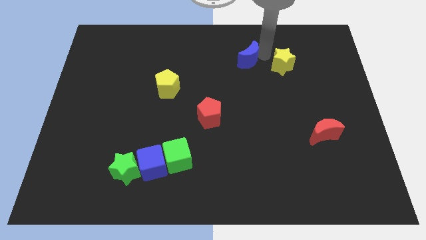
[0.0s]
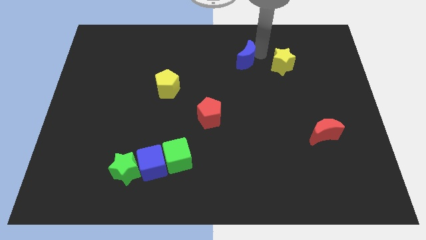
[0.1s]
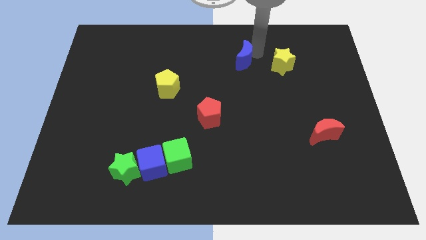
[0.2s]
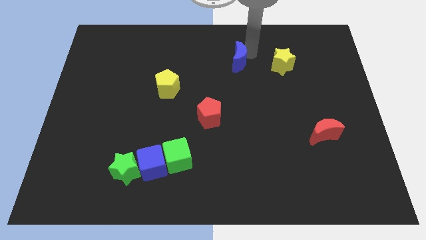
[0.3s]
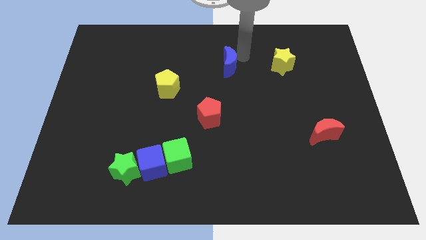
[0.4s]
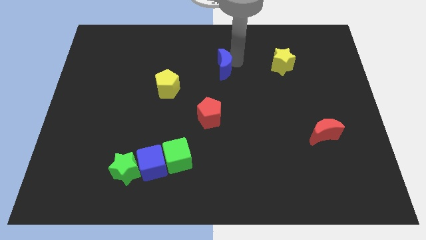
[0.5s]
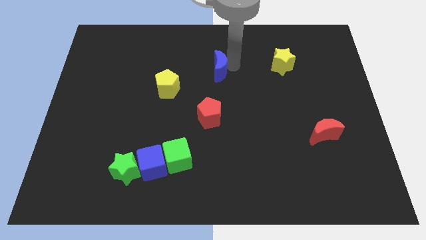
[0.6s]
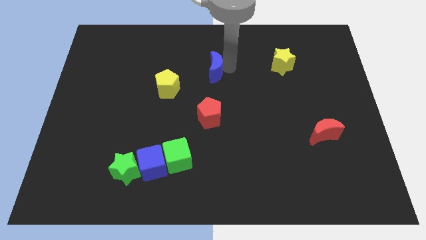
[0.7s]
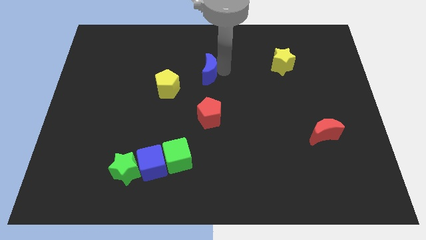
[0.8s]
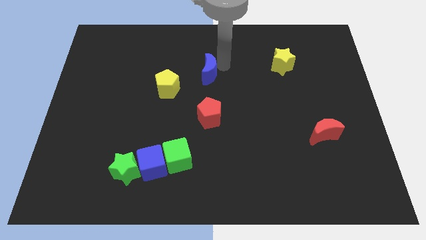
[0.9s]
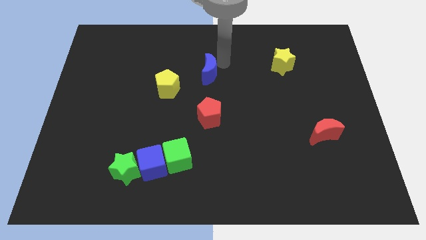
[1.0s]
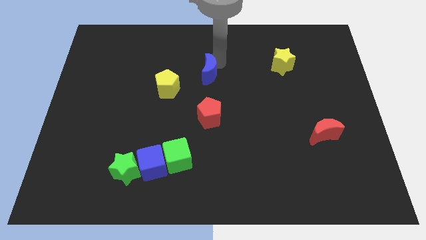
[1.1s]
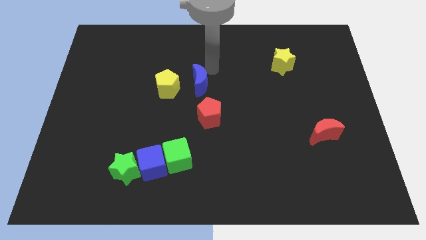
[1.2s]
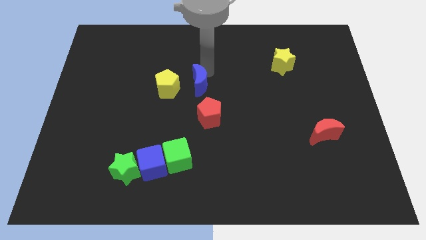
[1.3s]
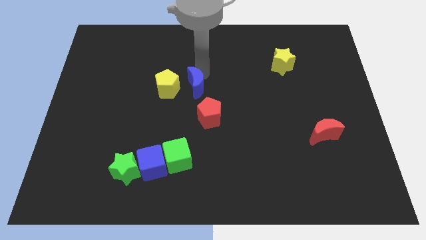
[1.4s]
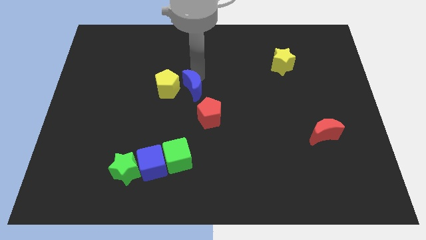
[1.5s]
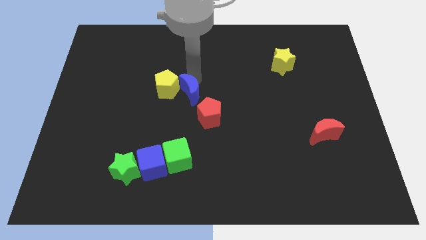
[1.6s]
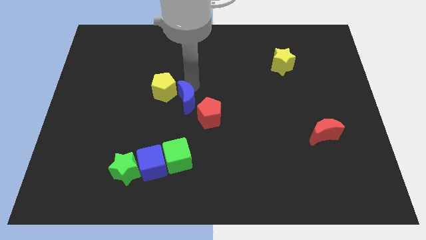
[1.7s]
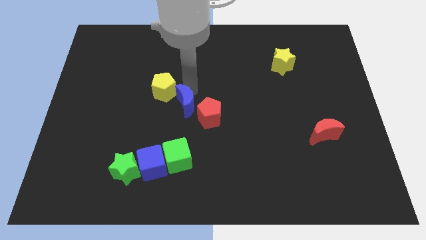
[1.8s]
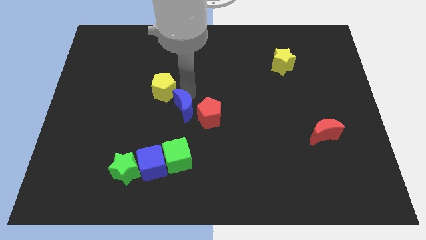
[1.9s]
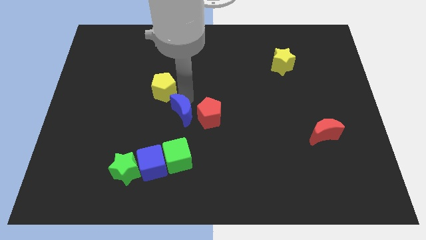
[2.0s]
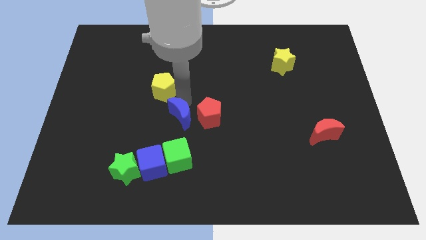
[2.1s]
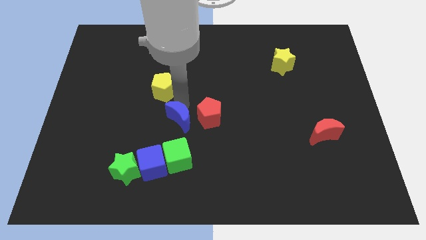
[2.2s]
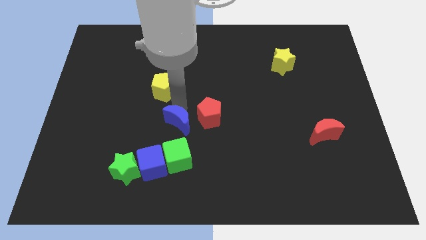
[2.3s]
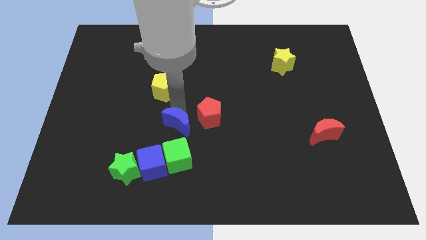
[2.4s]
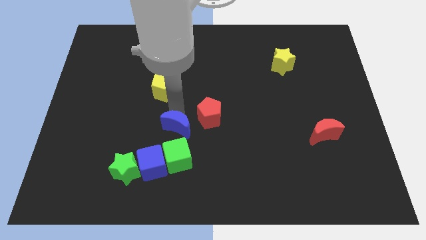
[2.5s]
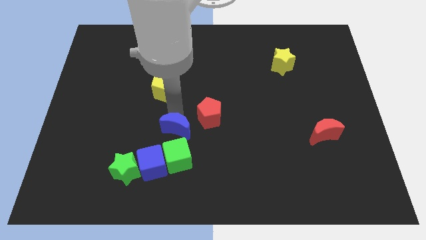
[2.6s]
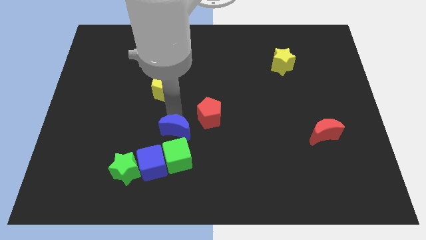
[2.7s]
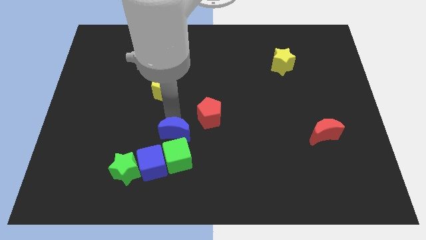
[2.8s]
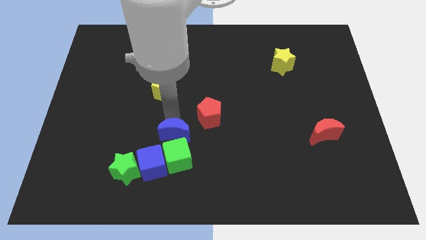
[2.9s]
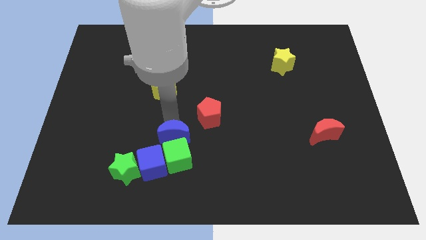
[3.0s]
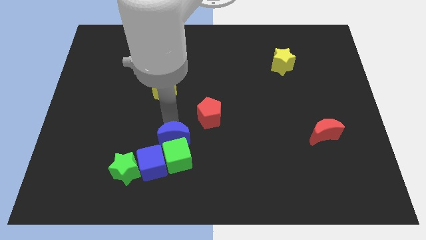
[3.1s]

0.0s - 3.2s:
put the blue moon at the top of green cube

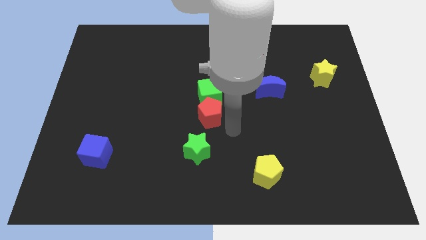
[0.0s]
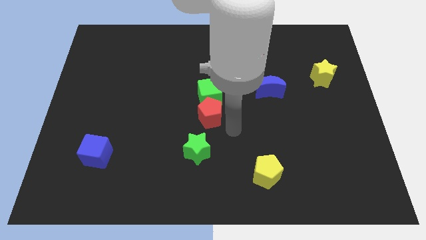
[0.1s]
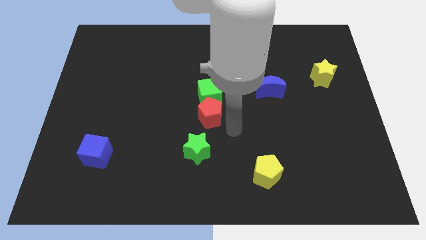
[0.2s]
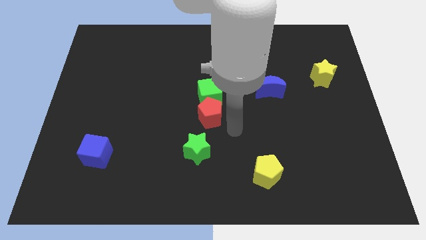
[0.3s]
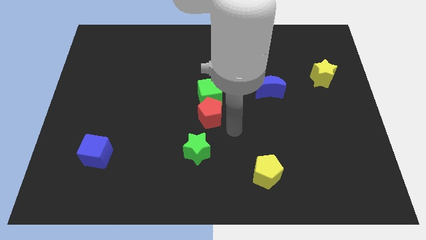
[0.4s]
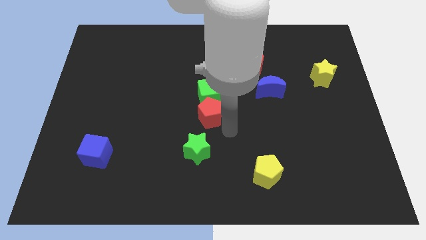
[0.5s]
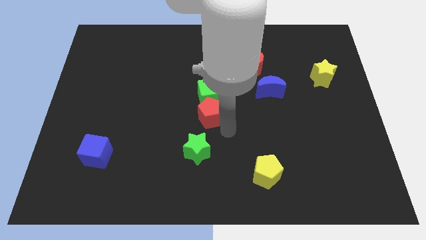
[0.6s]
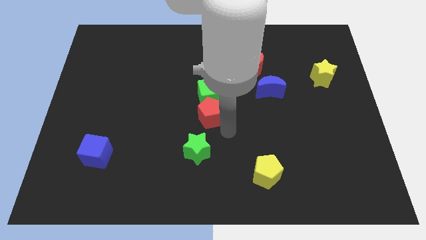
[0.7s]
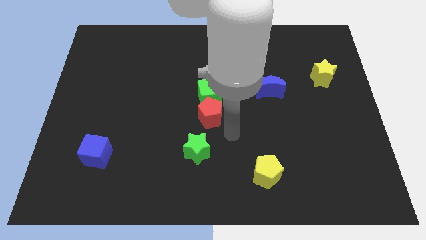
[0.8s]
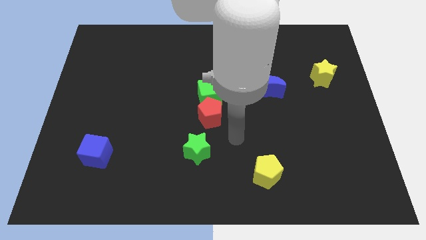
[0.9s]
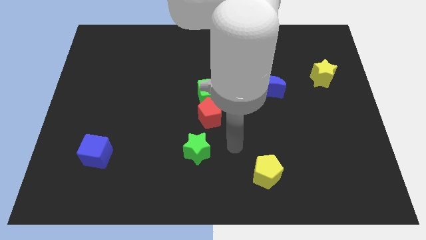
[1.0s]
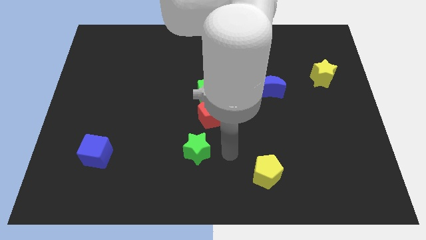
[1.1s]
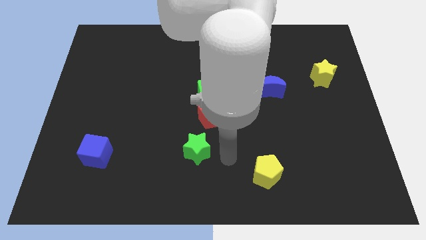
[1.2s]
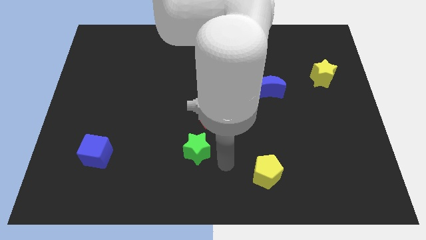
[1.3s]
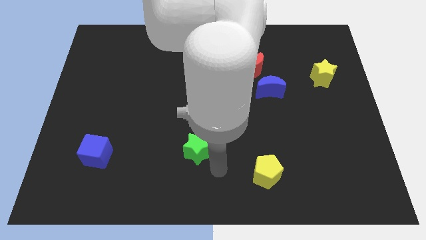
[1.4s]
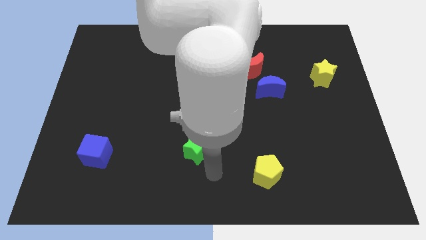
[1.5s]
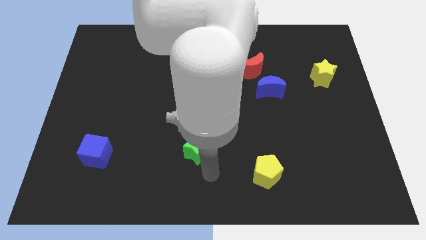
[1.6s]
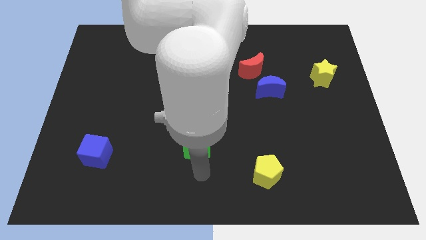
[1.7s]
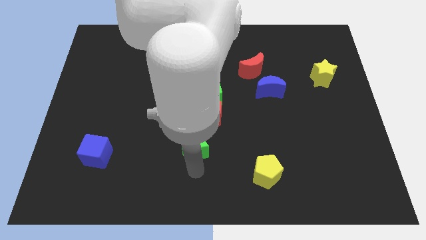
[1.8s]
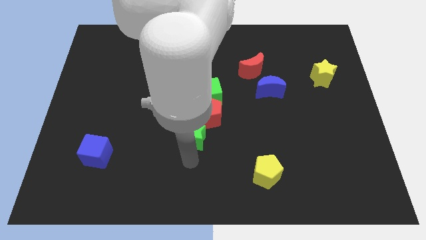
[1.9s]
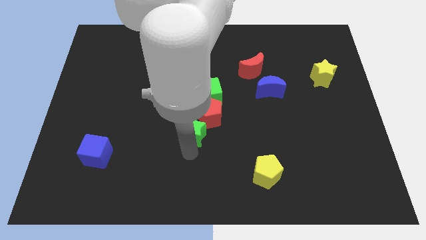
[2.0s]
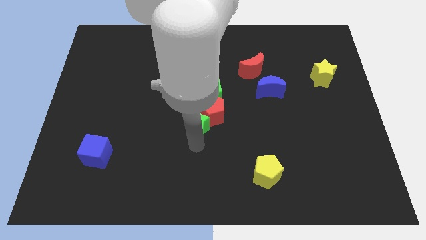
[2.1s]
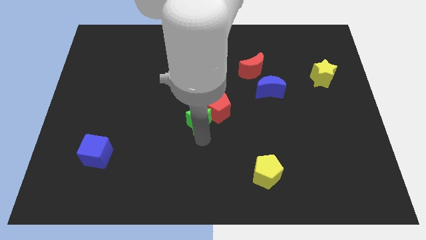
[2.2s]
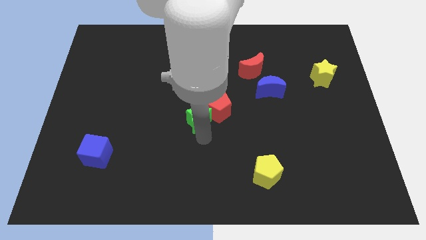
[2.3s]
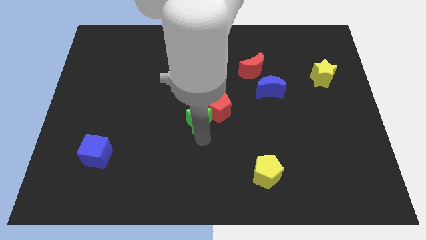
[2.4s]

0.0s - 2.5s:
move the green star into the red pentagon

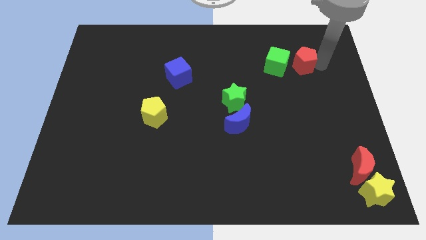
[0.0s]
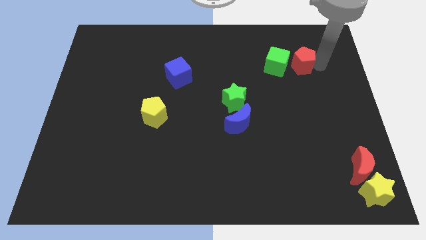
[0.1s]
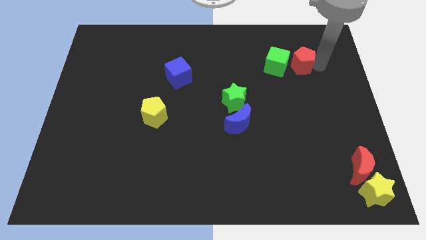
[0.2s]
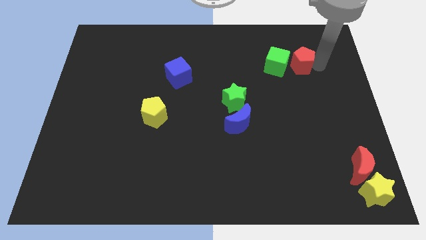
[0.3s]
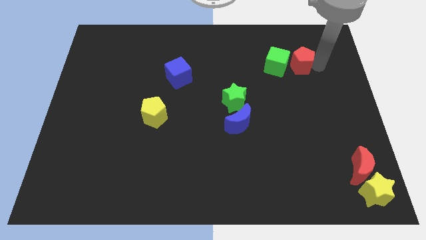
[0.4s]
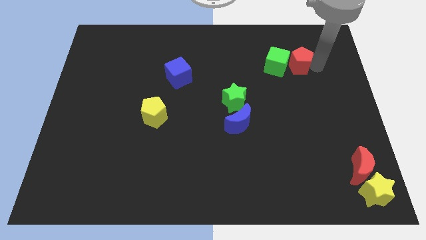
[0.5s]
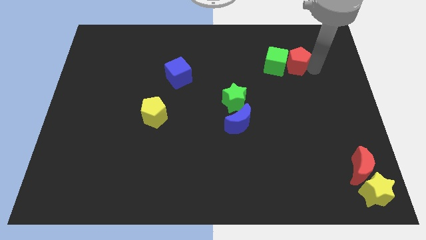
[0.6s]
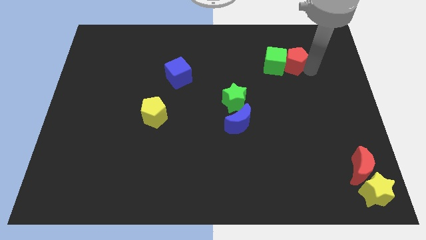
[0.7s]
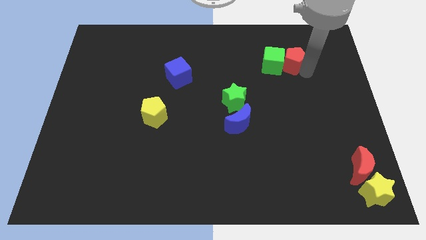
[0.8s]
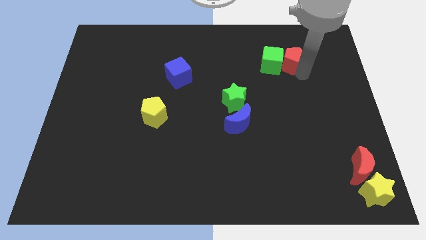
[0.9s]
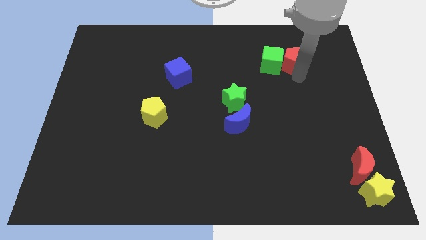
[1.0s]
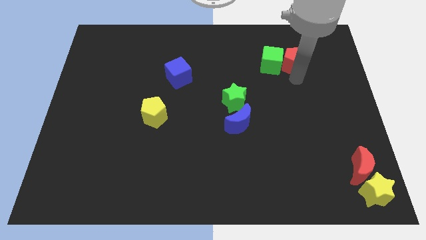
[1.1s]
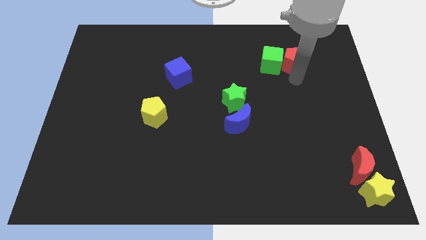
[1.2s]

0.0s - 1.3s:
move red pentagon and green cube slightly to the left

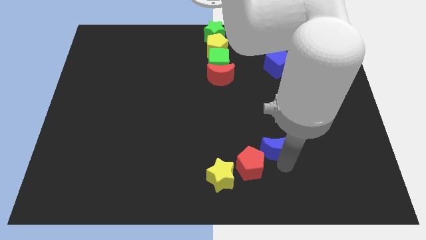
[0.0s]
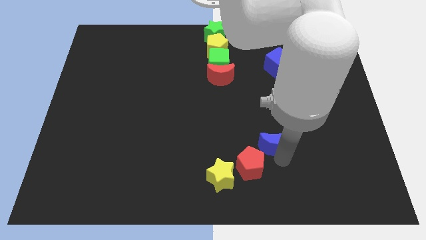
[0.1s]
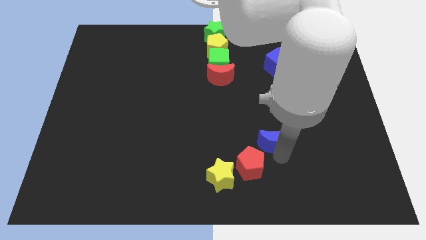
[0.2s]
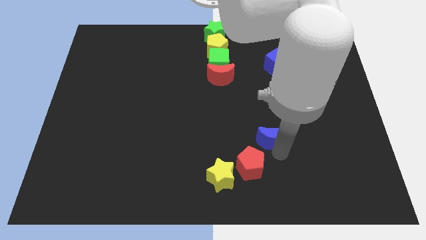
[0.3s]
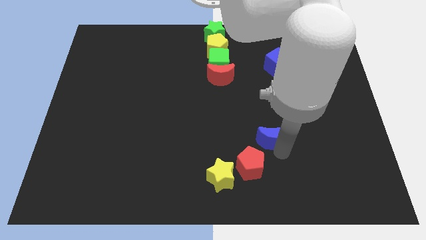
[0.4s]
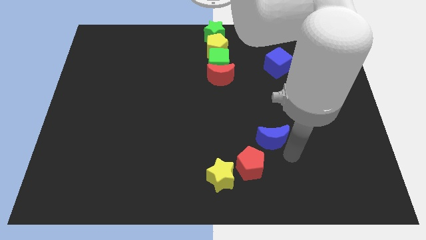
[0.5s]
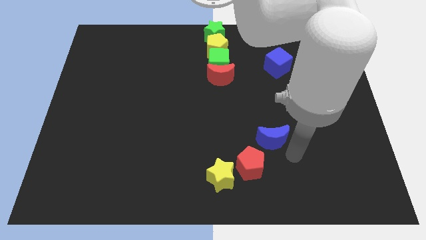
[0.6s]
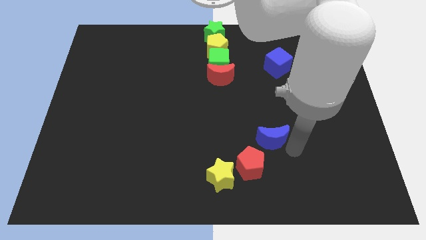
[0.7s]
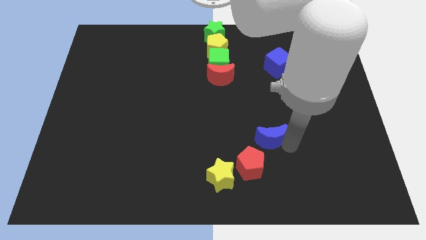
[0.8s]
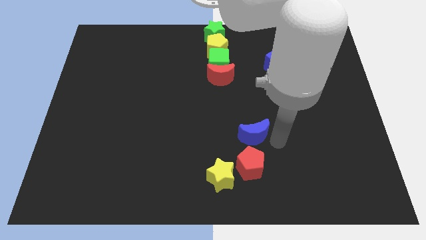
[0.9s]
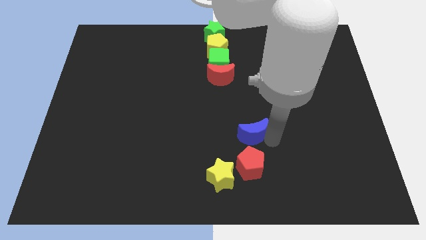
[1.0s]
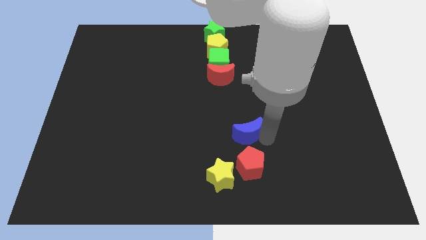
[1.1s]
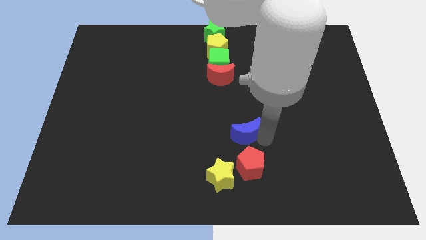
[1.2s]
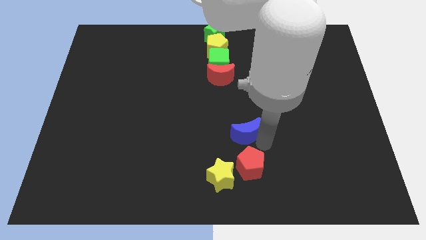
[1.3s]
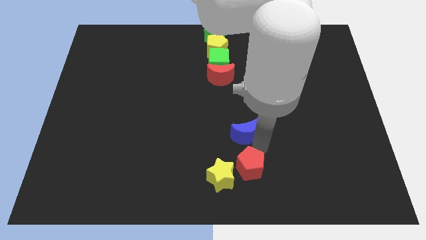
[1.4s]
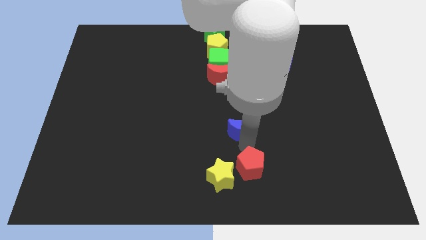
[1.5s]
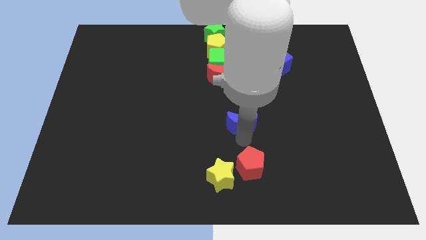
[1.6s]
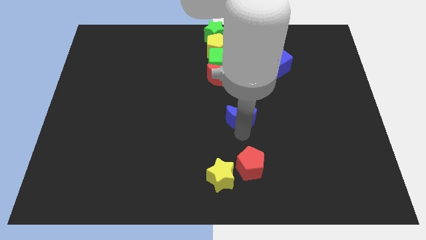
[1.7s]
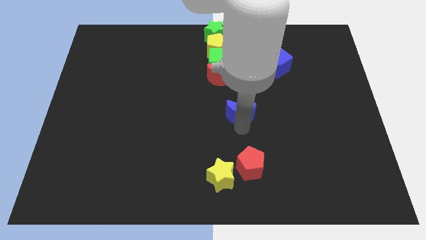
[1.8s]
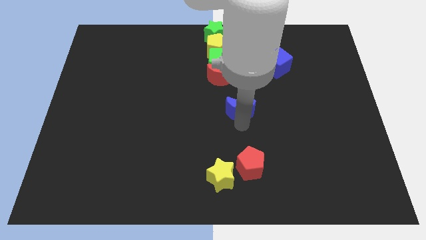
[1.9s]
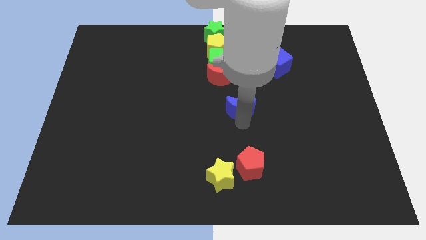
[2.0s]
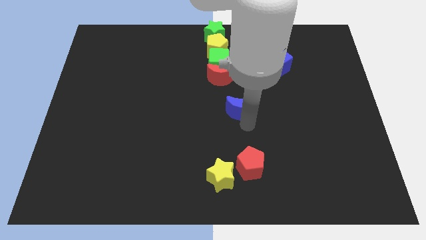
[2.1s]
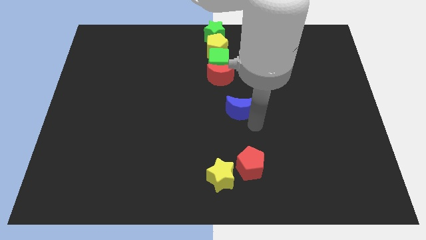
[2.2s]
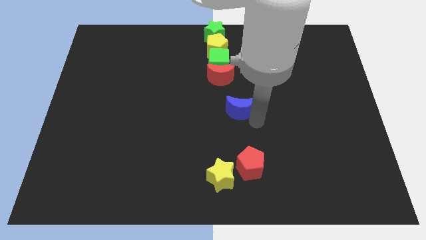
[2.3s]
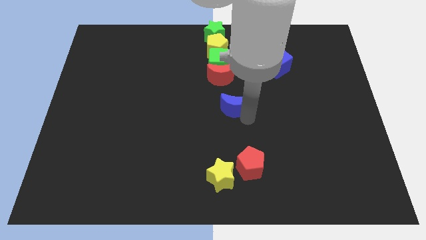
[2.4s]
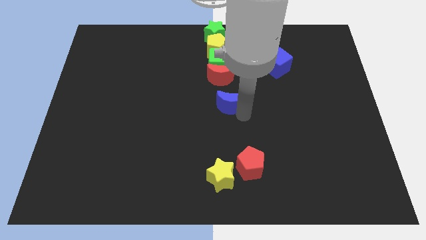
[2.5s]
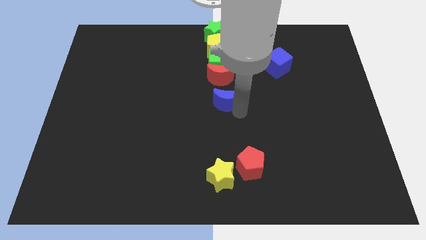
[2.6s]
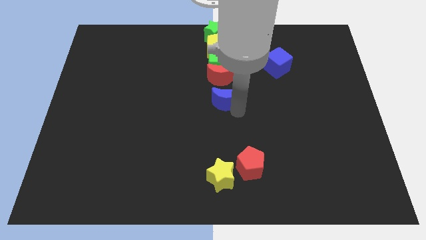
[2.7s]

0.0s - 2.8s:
move the blue moon down to the red moon
